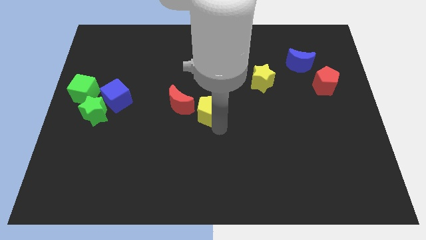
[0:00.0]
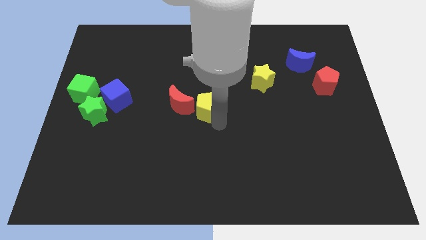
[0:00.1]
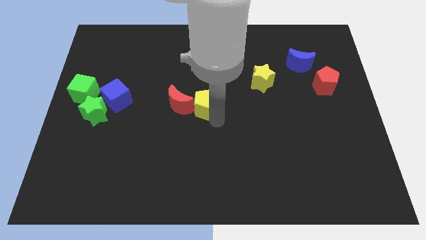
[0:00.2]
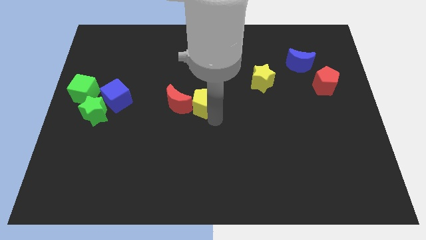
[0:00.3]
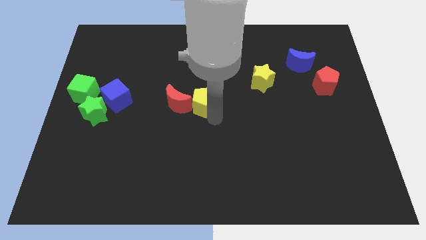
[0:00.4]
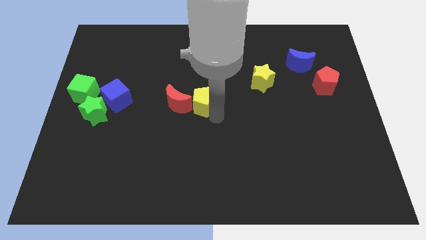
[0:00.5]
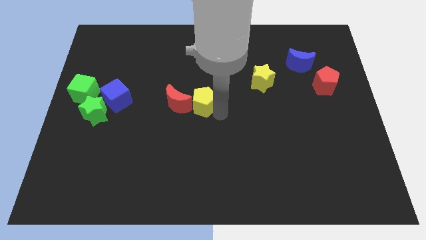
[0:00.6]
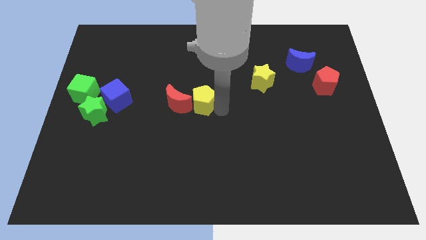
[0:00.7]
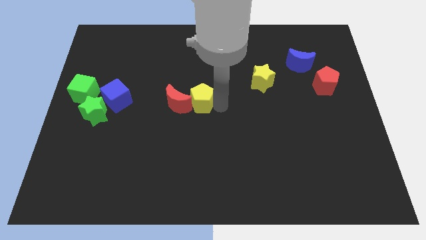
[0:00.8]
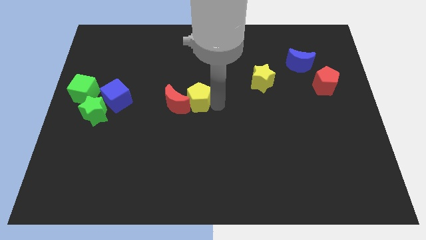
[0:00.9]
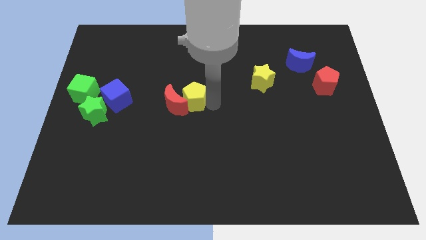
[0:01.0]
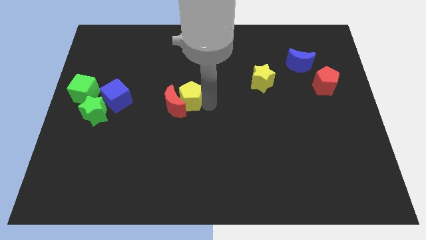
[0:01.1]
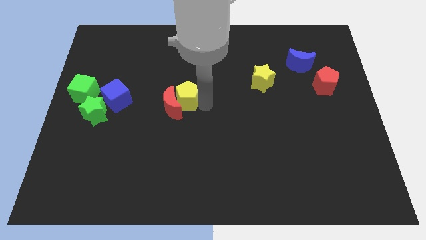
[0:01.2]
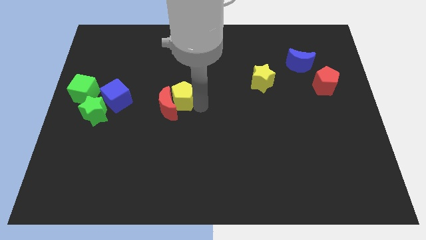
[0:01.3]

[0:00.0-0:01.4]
push the yellow pentagon towards the red moon

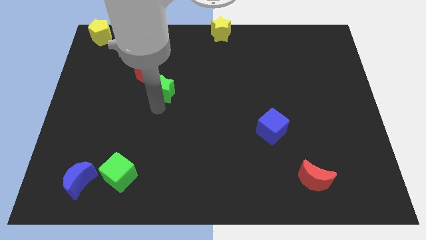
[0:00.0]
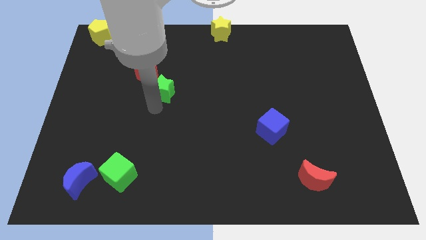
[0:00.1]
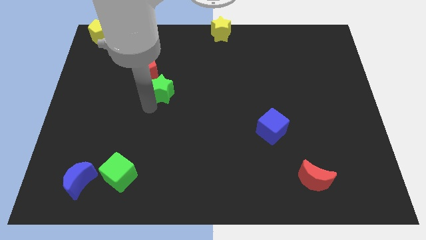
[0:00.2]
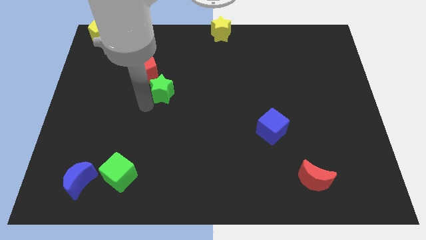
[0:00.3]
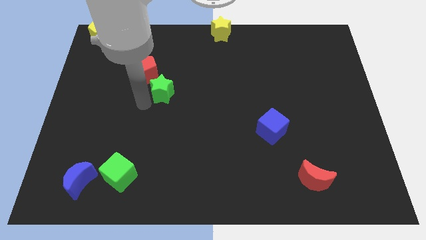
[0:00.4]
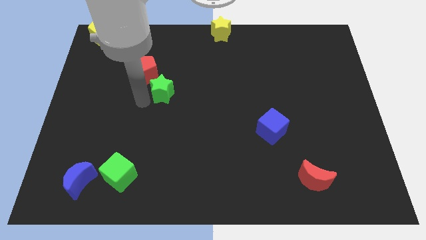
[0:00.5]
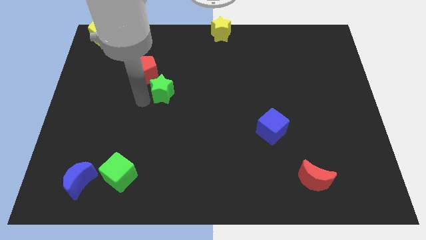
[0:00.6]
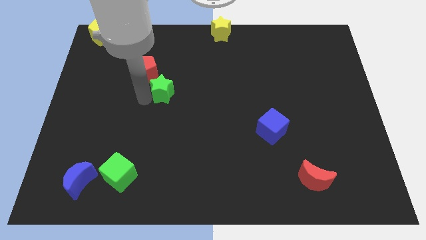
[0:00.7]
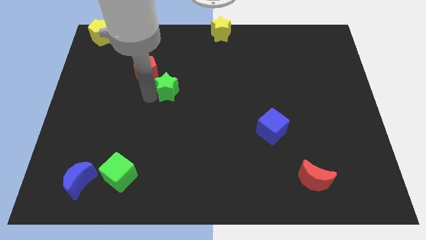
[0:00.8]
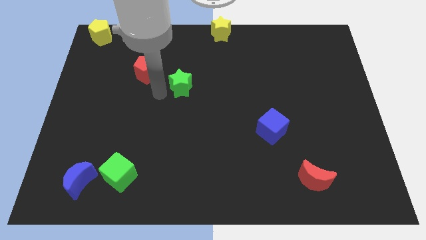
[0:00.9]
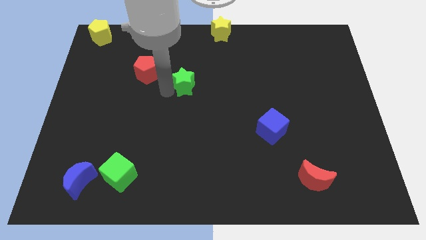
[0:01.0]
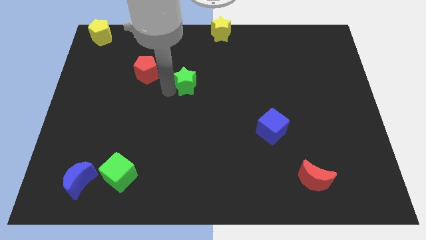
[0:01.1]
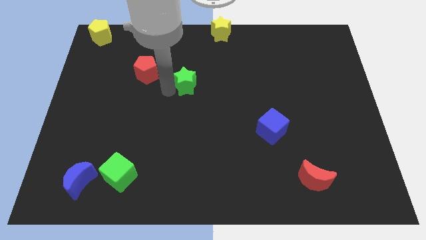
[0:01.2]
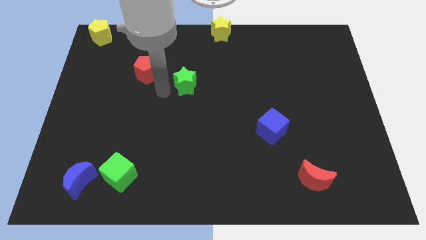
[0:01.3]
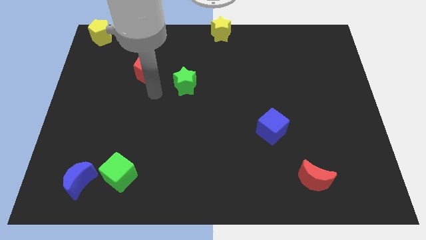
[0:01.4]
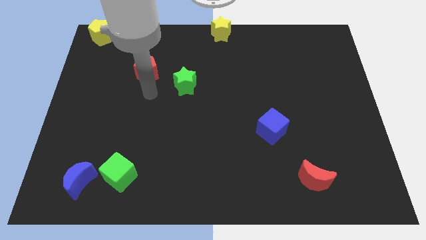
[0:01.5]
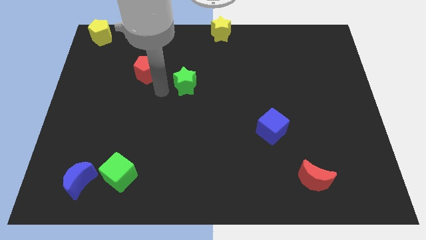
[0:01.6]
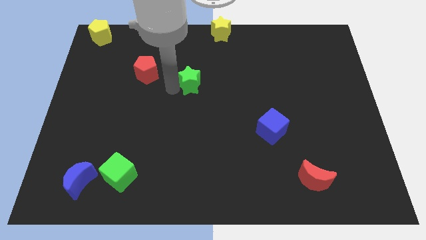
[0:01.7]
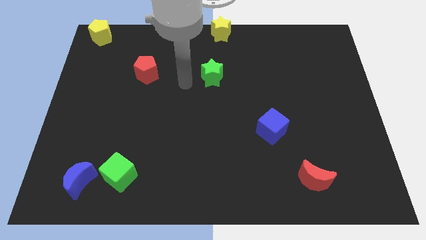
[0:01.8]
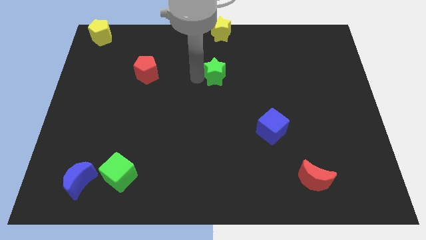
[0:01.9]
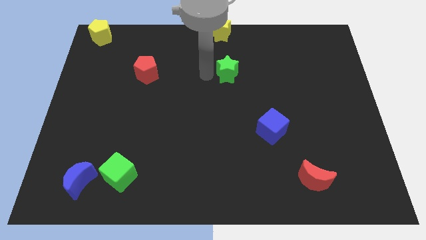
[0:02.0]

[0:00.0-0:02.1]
place the green star below the yellow star

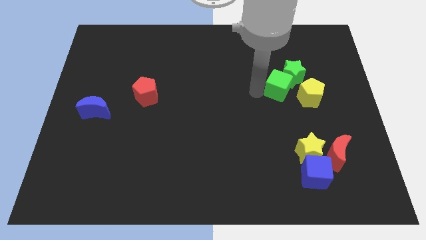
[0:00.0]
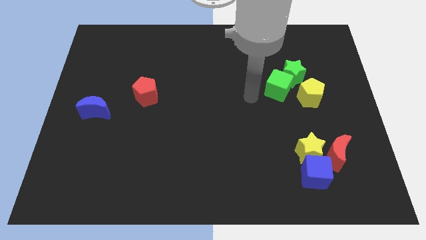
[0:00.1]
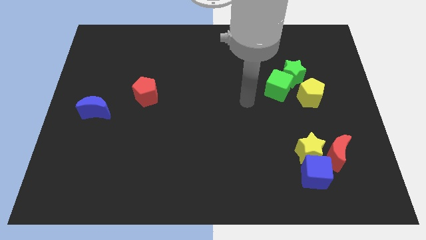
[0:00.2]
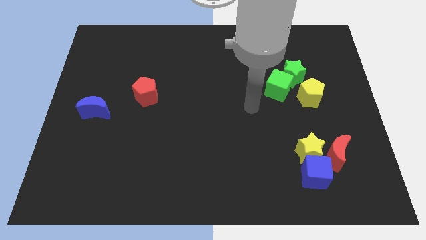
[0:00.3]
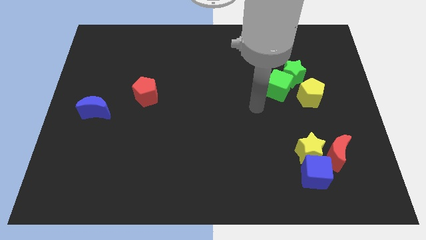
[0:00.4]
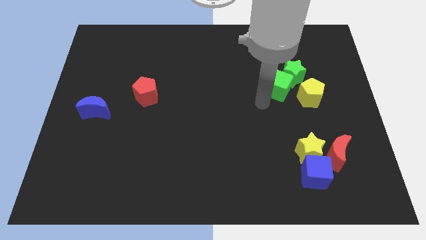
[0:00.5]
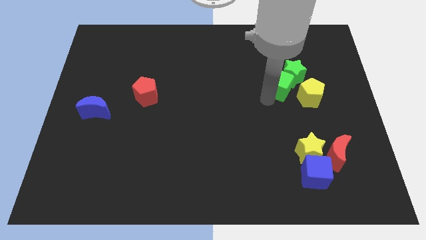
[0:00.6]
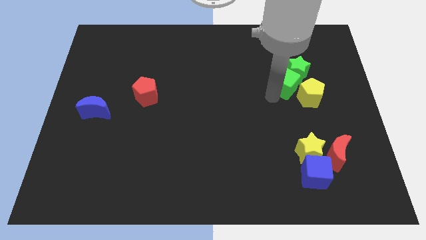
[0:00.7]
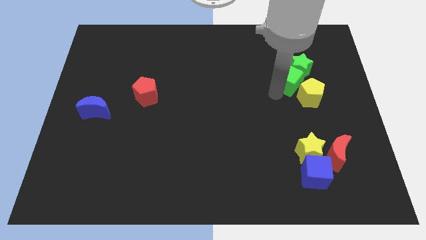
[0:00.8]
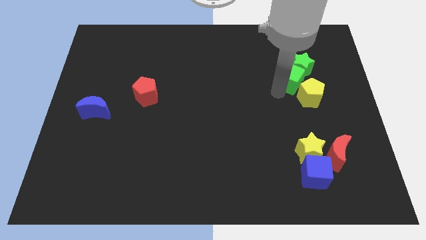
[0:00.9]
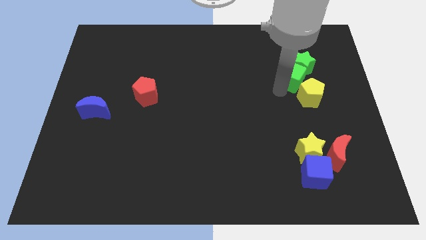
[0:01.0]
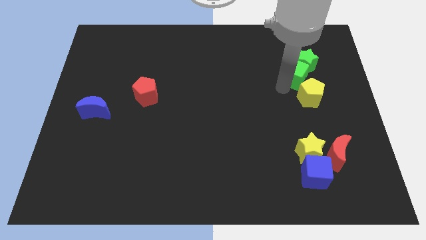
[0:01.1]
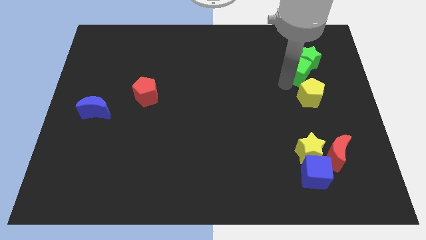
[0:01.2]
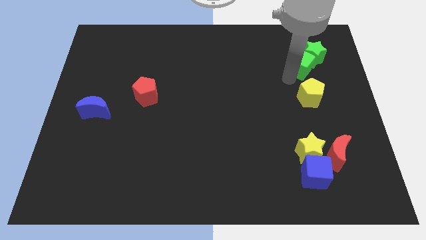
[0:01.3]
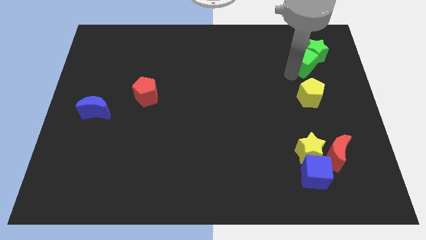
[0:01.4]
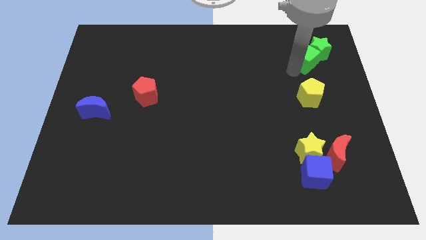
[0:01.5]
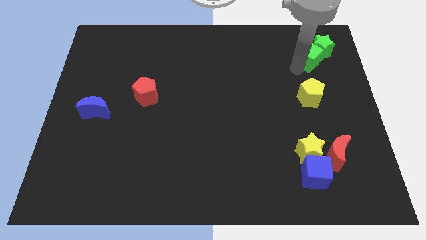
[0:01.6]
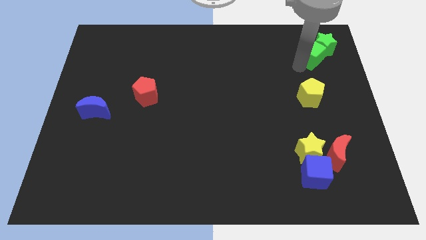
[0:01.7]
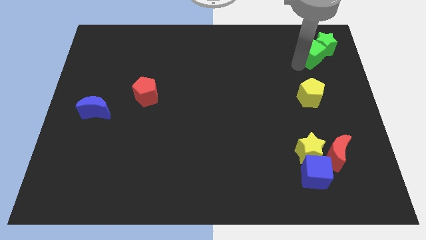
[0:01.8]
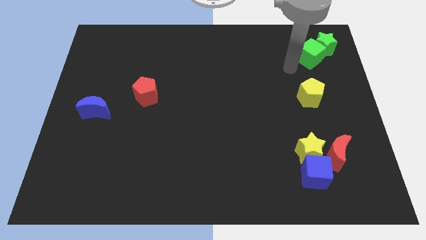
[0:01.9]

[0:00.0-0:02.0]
place green cube and green star to the top right corner of the board

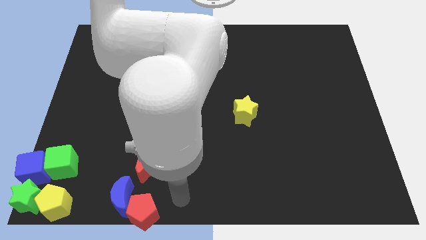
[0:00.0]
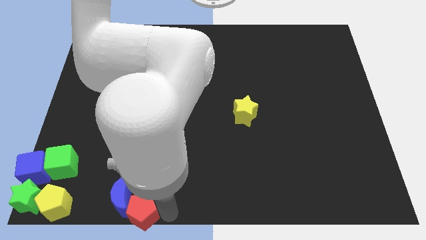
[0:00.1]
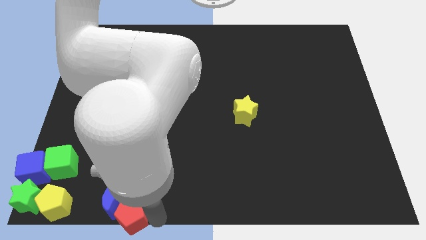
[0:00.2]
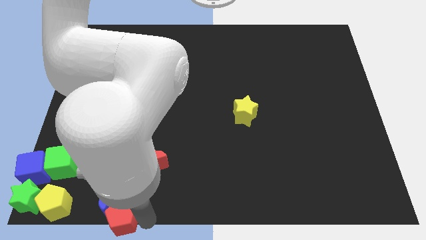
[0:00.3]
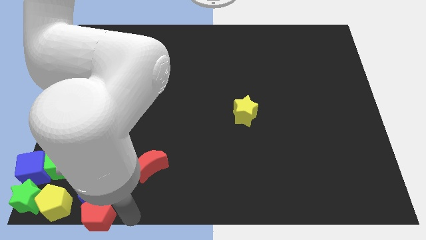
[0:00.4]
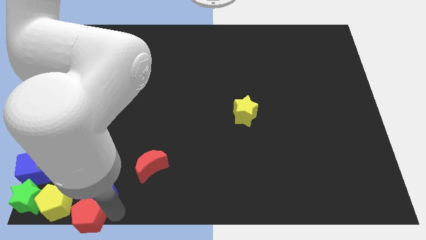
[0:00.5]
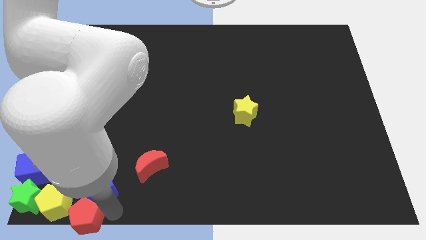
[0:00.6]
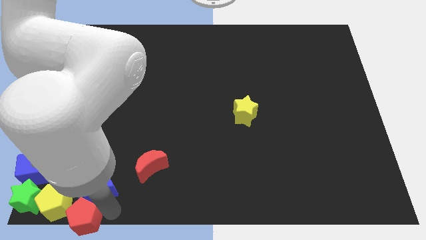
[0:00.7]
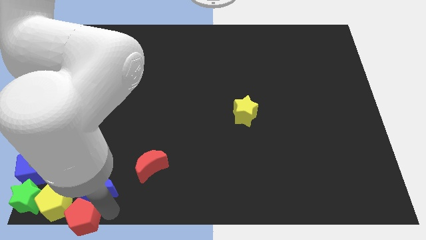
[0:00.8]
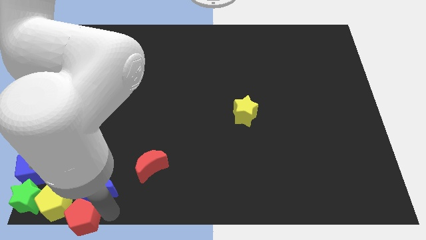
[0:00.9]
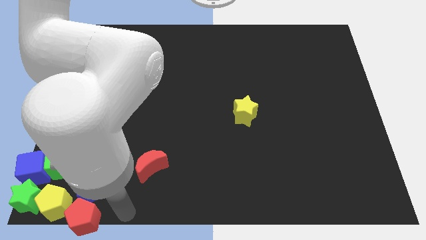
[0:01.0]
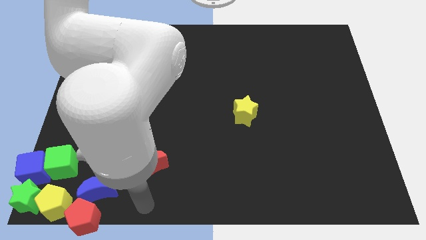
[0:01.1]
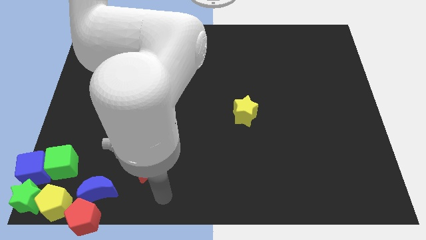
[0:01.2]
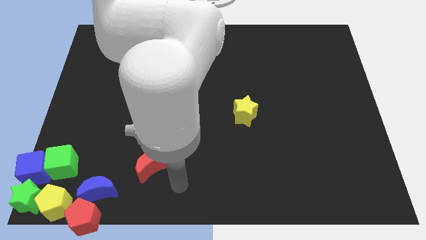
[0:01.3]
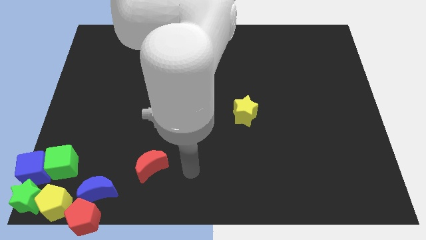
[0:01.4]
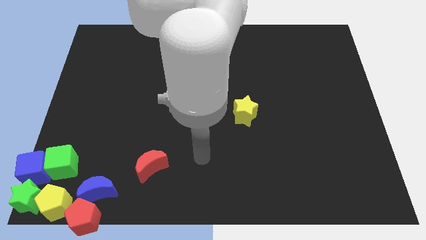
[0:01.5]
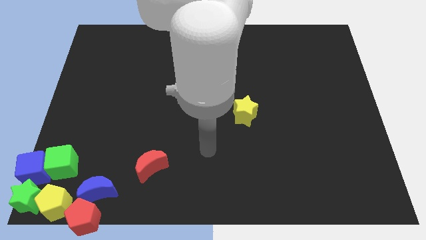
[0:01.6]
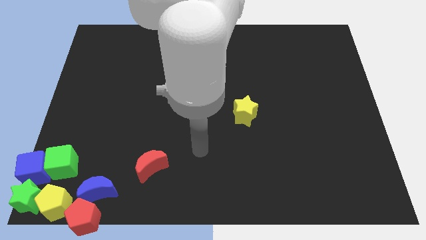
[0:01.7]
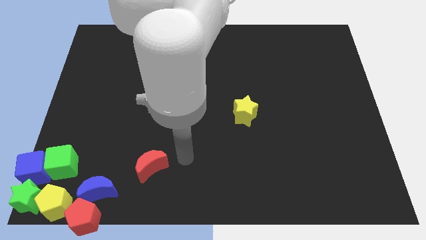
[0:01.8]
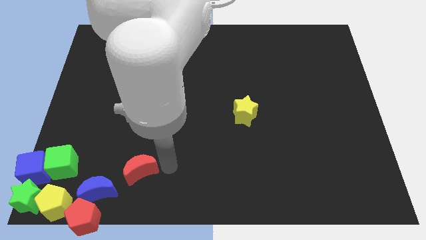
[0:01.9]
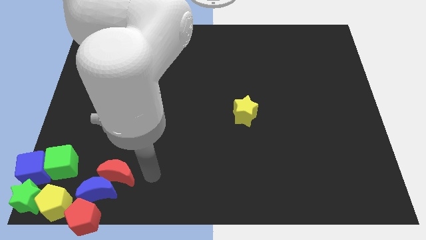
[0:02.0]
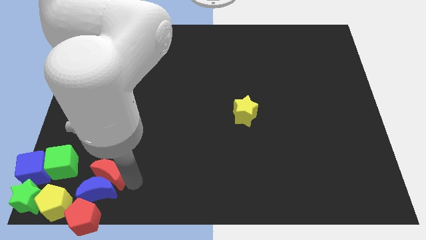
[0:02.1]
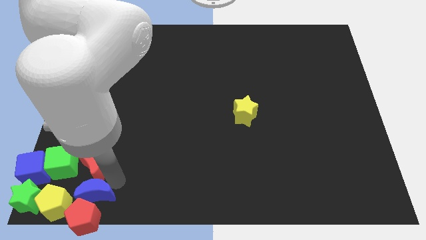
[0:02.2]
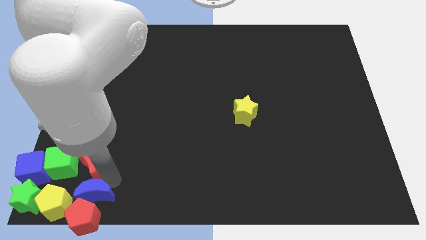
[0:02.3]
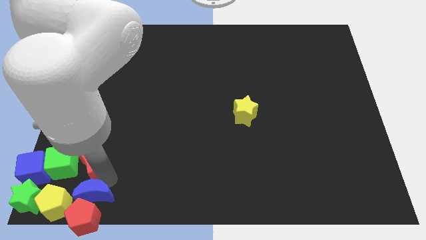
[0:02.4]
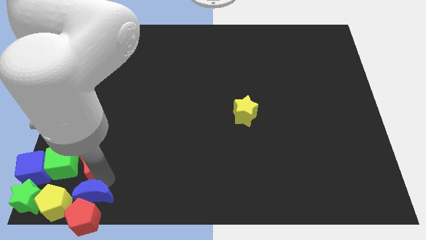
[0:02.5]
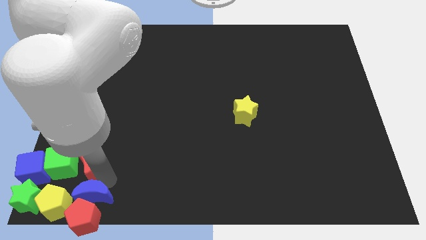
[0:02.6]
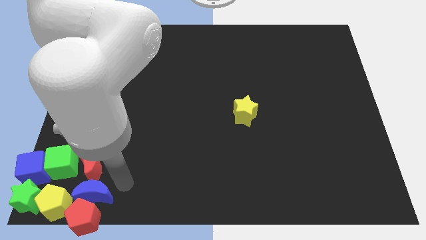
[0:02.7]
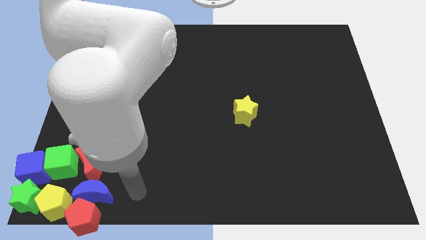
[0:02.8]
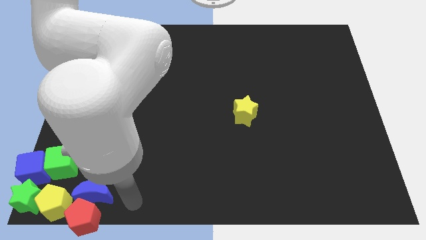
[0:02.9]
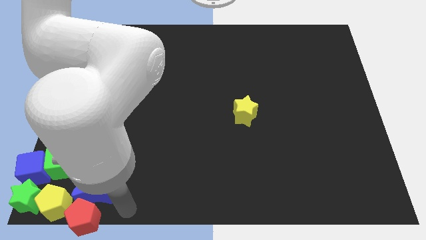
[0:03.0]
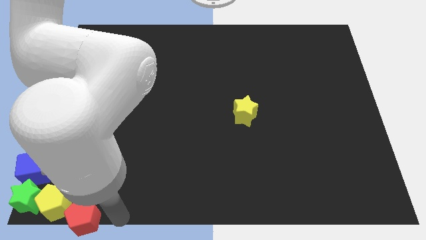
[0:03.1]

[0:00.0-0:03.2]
slide the red blocks and blue moon to the group of blocks

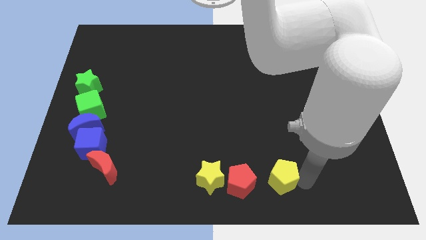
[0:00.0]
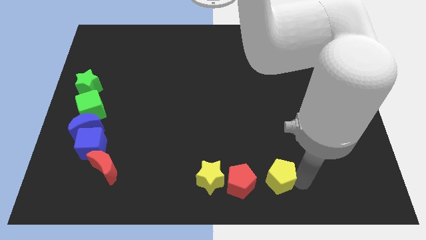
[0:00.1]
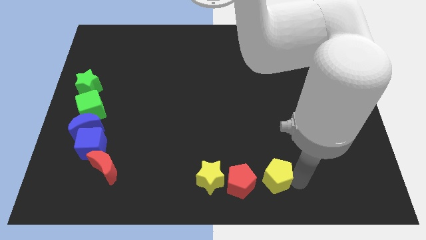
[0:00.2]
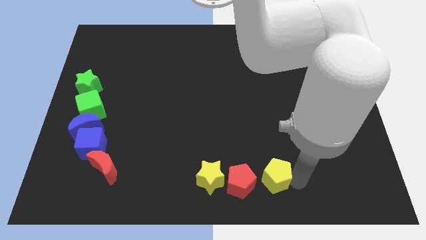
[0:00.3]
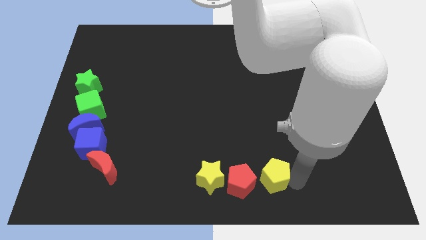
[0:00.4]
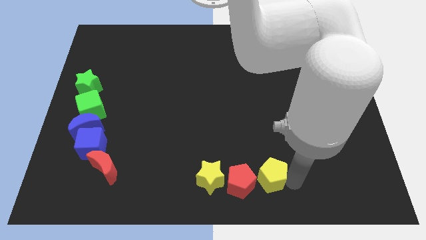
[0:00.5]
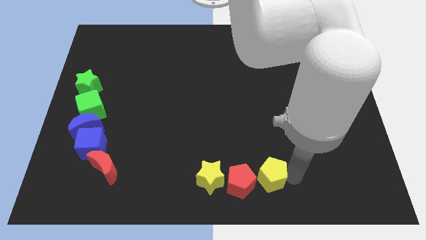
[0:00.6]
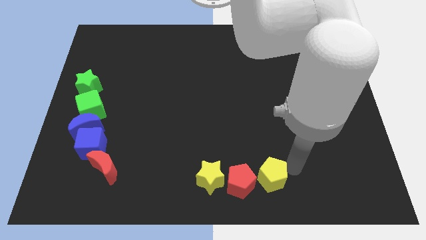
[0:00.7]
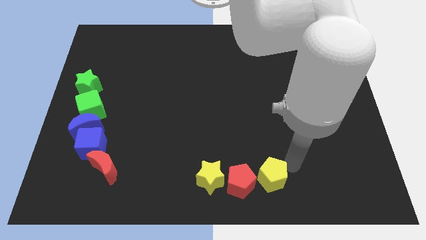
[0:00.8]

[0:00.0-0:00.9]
move the yellow pentagon to the right of the red pentagon
